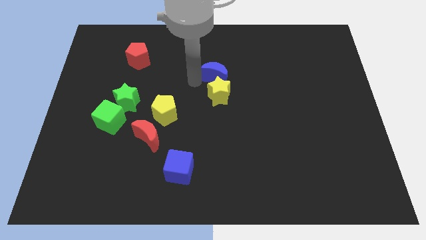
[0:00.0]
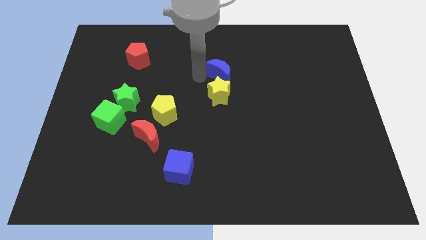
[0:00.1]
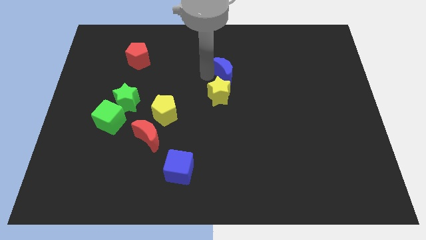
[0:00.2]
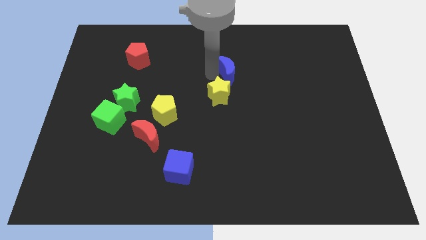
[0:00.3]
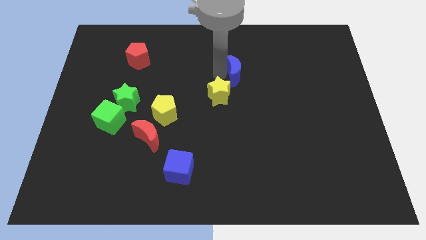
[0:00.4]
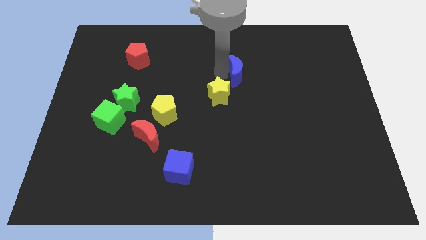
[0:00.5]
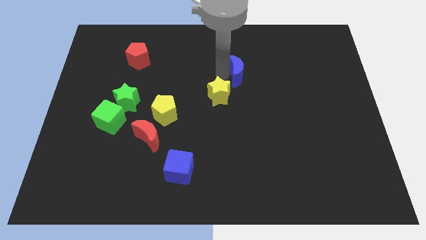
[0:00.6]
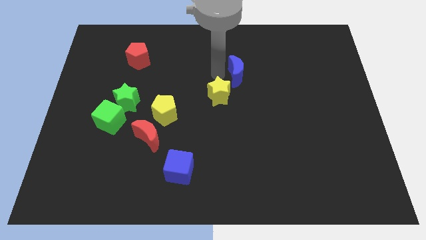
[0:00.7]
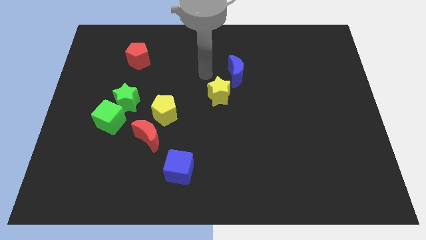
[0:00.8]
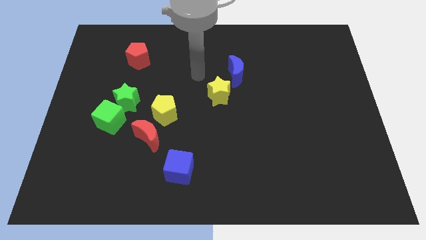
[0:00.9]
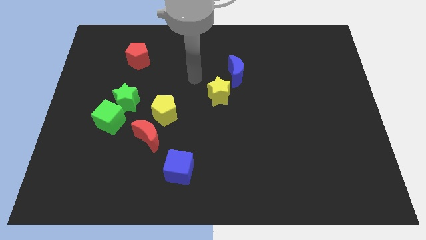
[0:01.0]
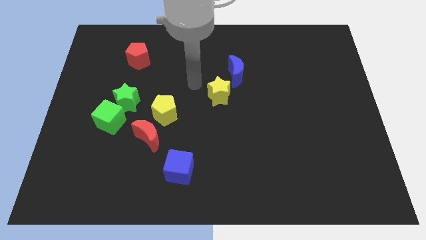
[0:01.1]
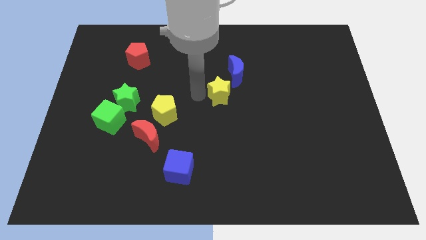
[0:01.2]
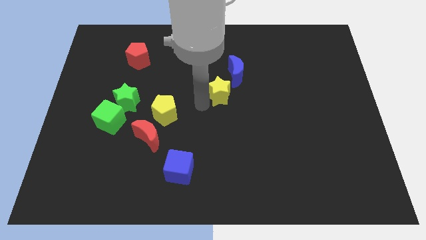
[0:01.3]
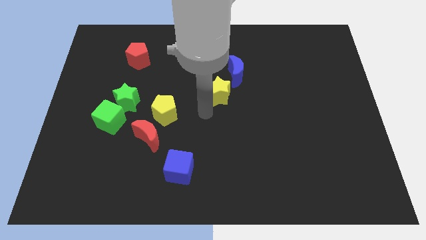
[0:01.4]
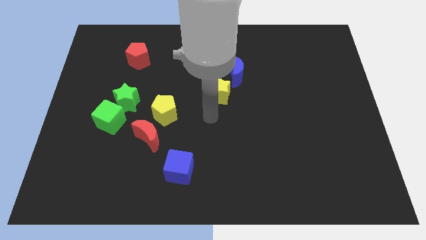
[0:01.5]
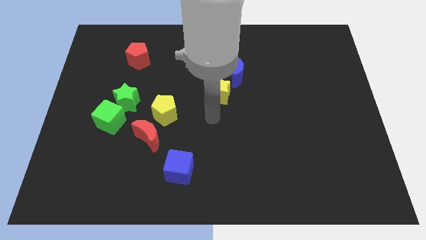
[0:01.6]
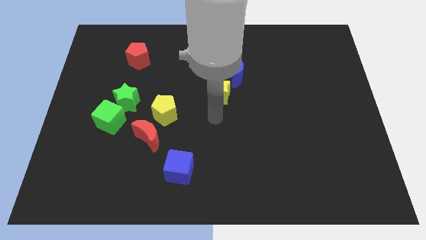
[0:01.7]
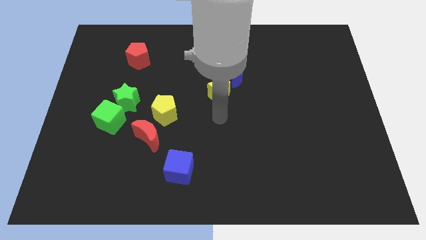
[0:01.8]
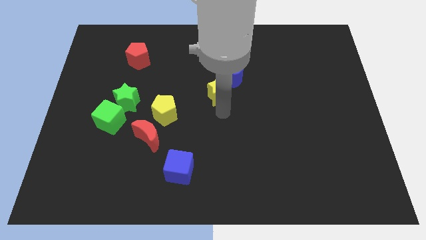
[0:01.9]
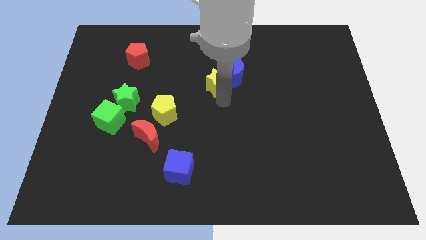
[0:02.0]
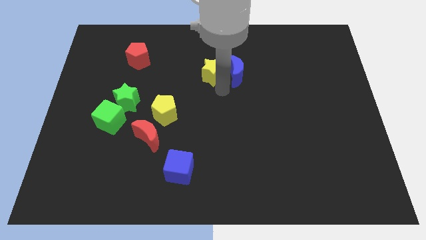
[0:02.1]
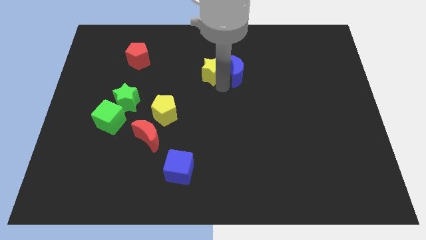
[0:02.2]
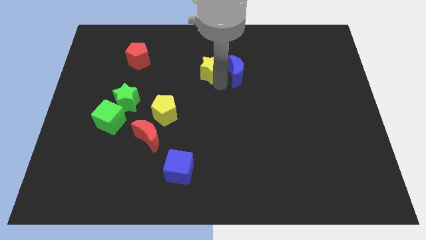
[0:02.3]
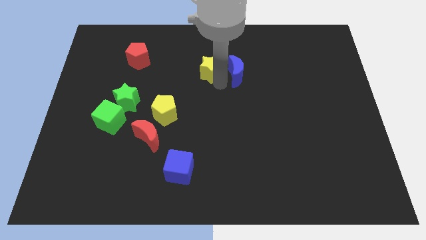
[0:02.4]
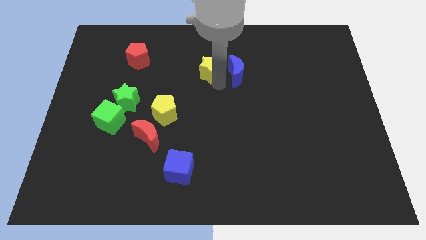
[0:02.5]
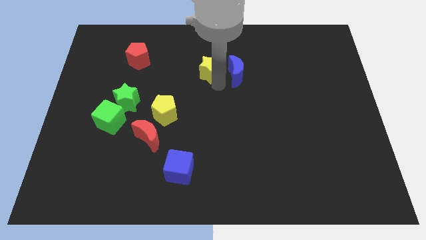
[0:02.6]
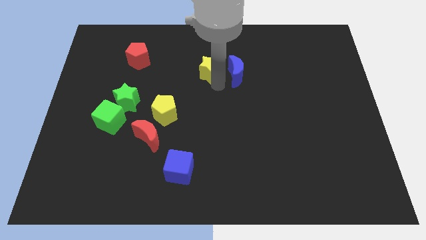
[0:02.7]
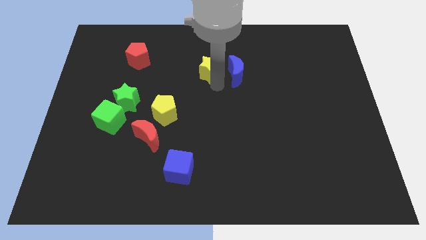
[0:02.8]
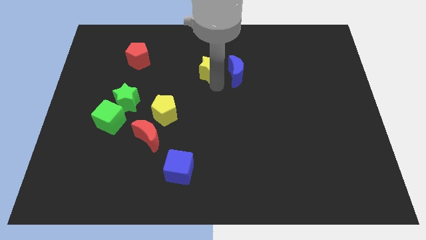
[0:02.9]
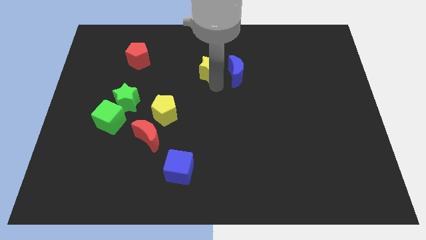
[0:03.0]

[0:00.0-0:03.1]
slightly move yellow star upwards

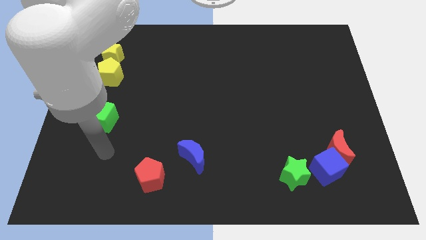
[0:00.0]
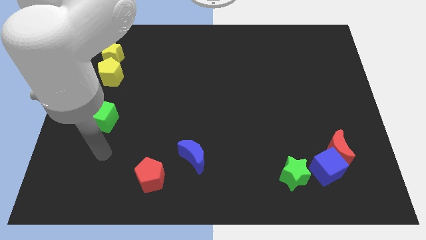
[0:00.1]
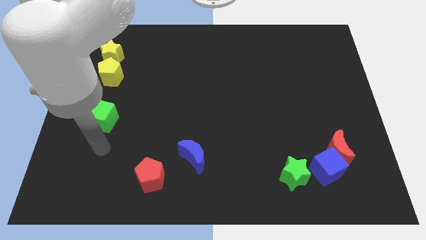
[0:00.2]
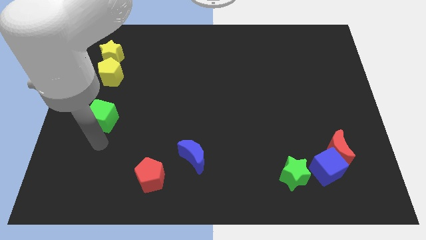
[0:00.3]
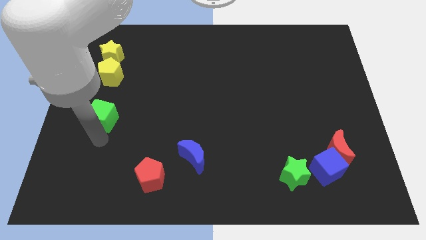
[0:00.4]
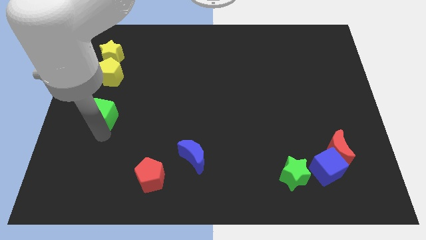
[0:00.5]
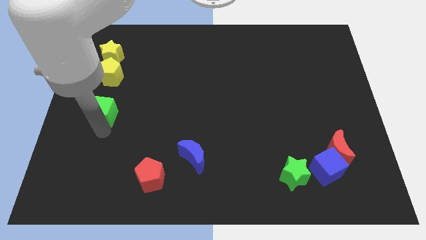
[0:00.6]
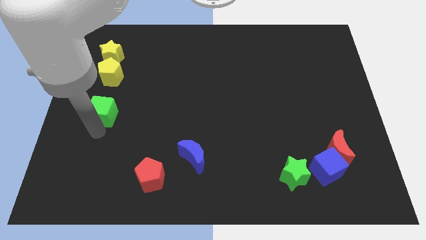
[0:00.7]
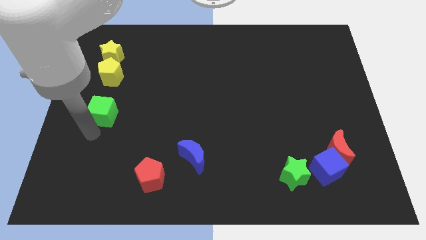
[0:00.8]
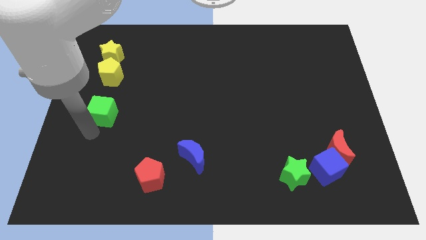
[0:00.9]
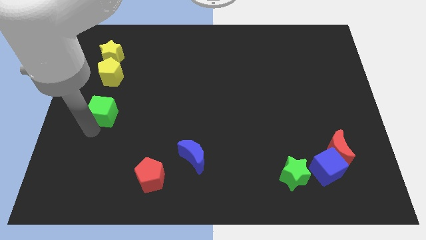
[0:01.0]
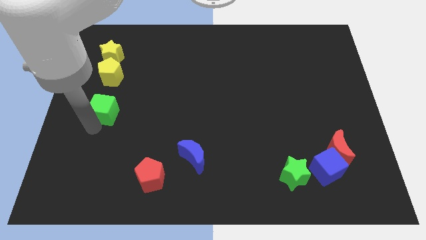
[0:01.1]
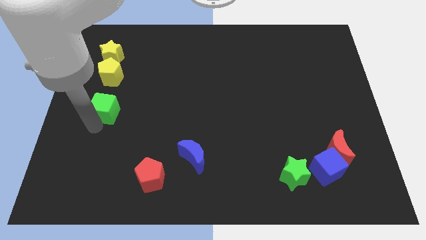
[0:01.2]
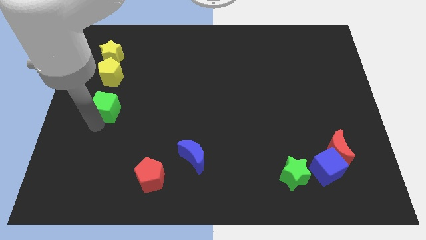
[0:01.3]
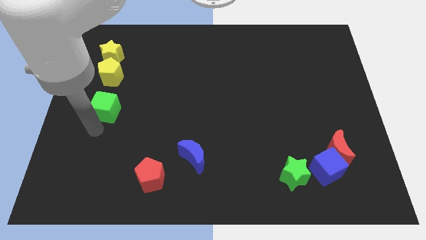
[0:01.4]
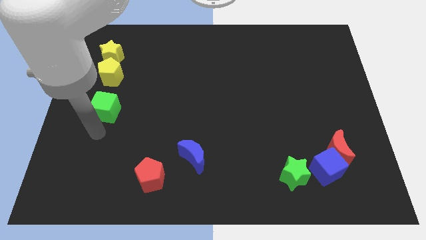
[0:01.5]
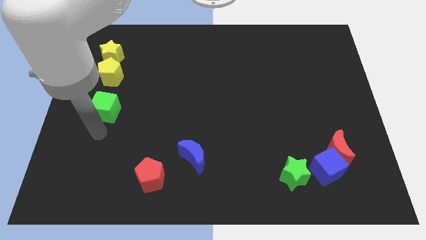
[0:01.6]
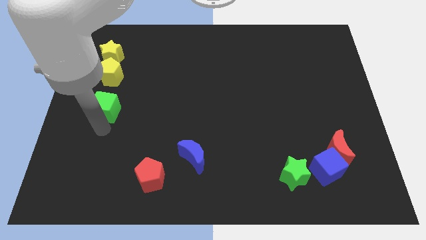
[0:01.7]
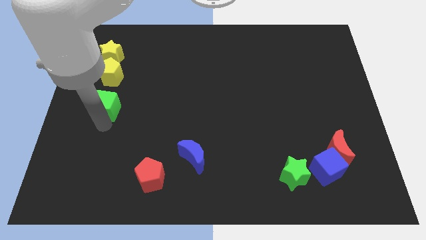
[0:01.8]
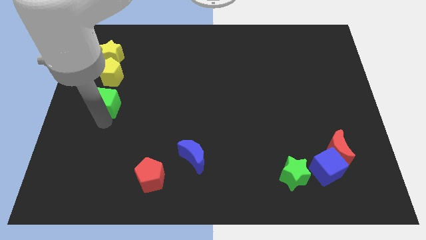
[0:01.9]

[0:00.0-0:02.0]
place the green cube below the yellow pentagon

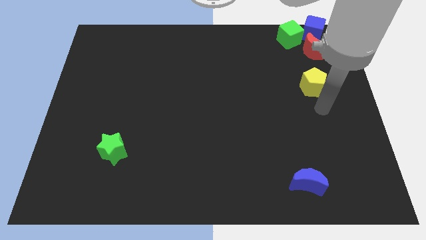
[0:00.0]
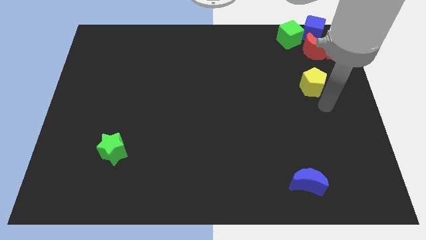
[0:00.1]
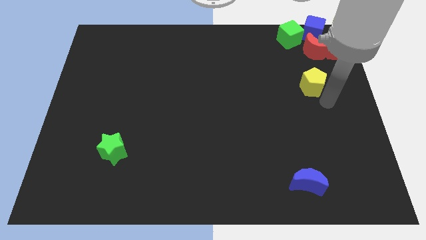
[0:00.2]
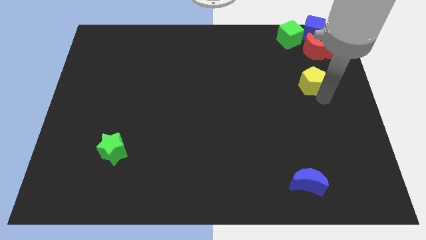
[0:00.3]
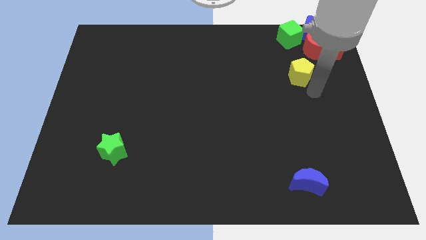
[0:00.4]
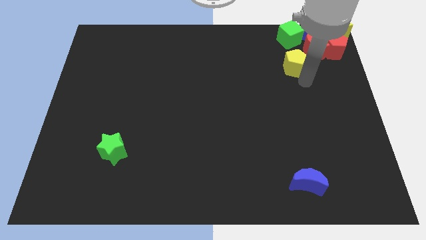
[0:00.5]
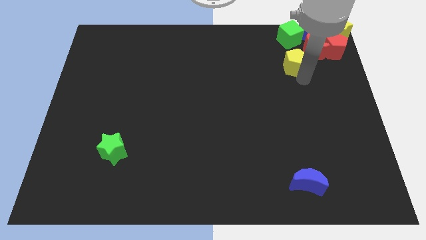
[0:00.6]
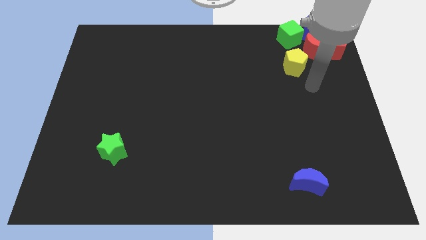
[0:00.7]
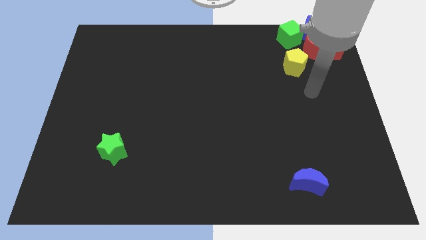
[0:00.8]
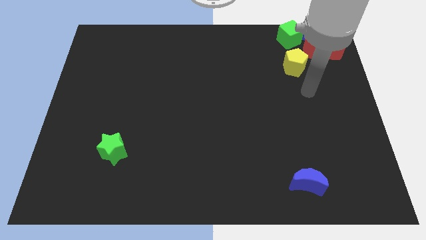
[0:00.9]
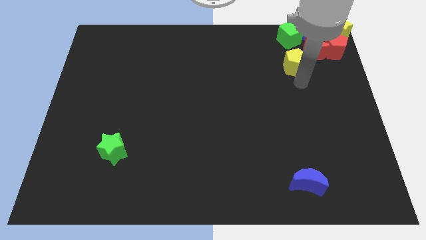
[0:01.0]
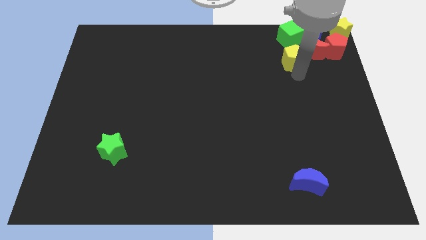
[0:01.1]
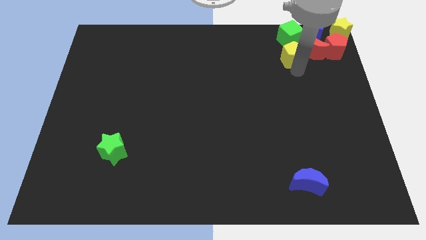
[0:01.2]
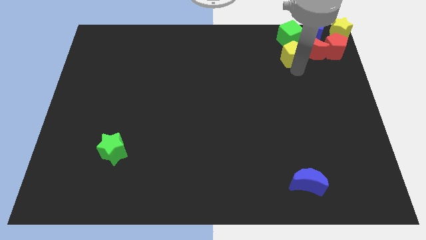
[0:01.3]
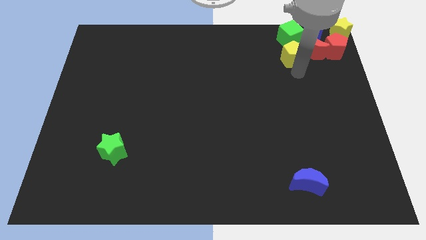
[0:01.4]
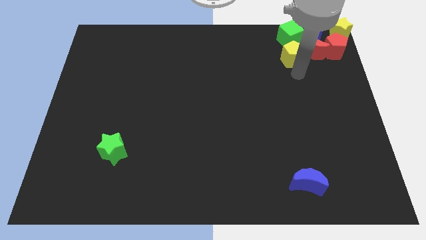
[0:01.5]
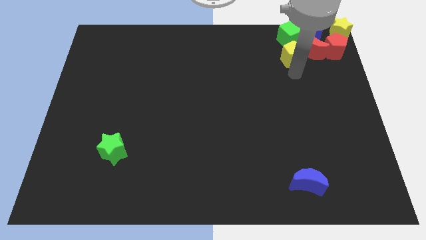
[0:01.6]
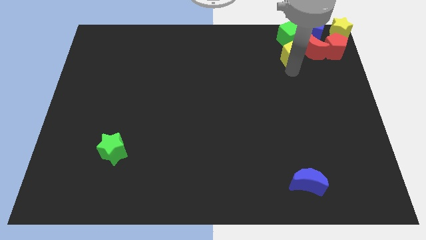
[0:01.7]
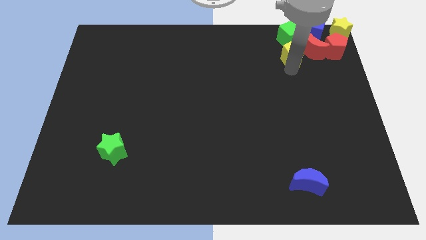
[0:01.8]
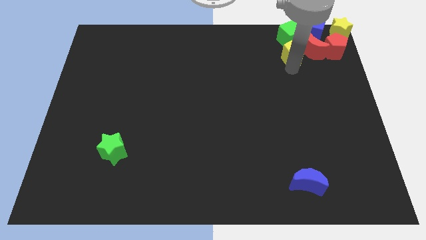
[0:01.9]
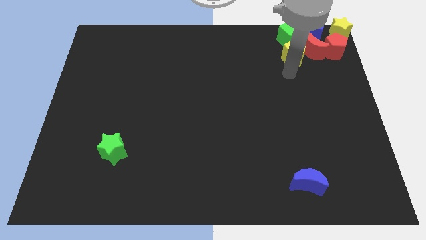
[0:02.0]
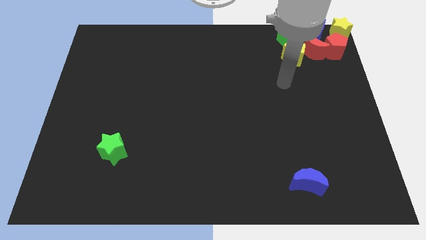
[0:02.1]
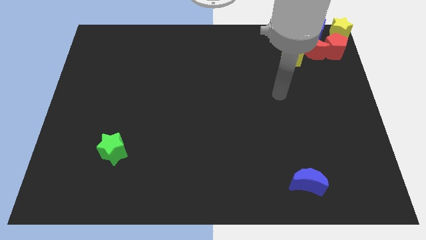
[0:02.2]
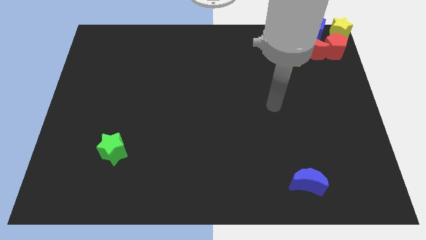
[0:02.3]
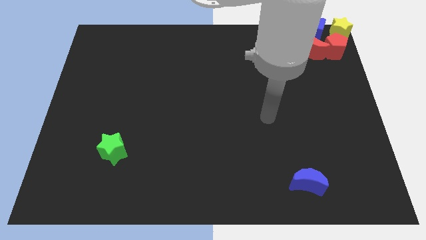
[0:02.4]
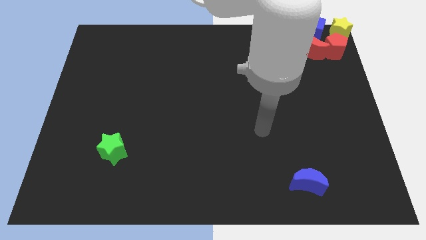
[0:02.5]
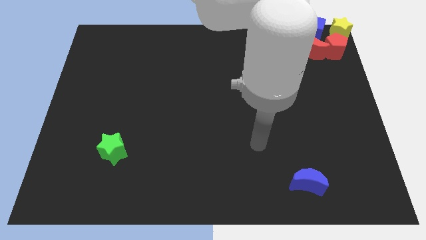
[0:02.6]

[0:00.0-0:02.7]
place the yellow pentagon in between the red moon and green cube

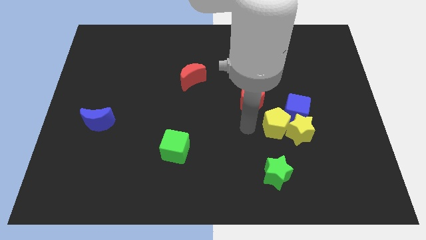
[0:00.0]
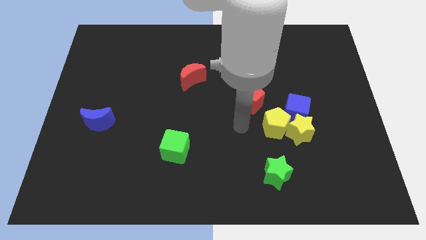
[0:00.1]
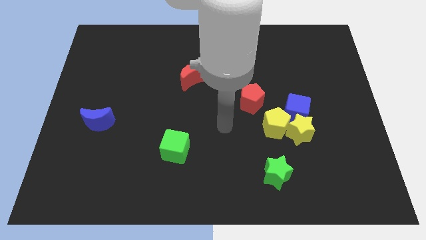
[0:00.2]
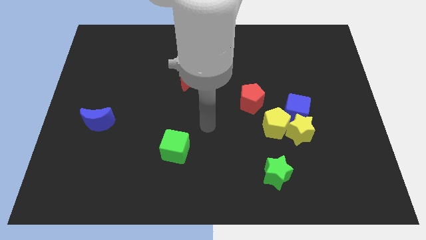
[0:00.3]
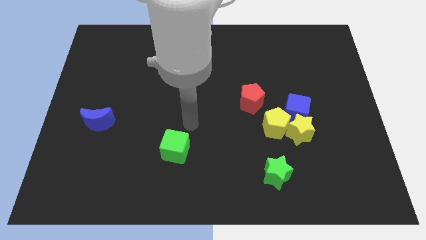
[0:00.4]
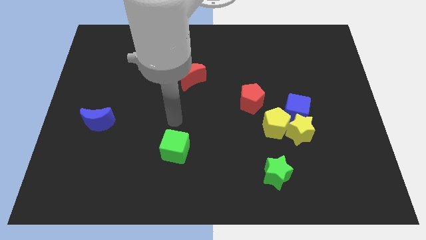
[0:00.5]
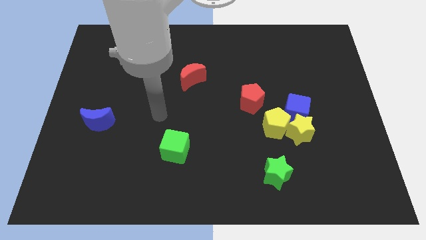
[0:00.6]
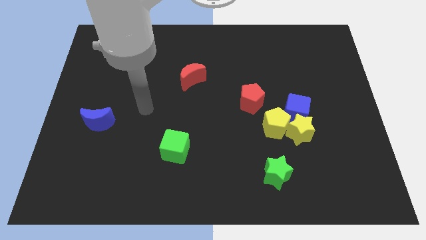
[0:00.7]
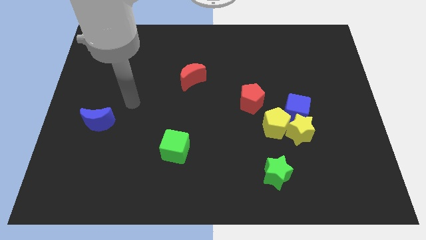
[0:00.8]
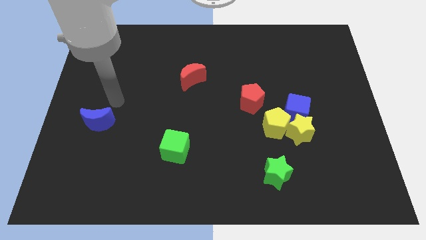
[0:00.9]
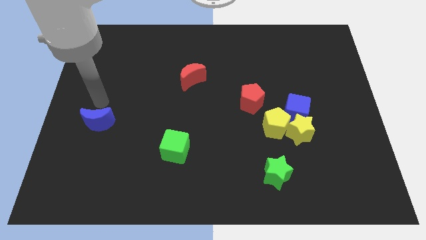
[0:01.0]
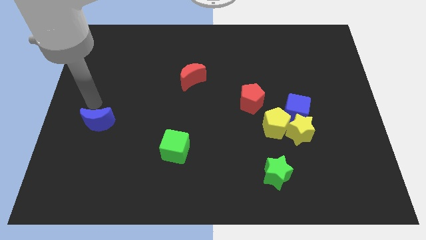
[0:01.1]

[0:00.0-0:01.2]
place your arm to the top of the blue moon

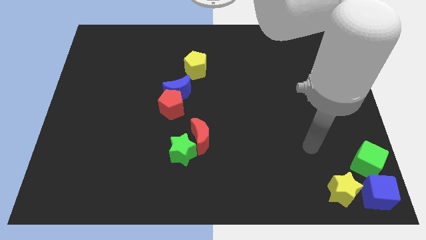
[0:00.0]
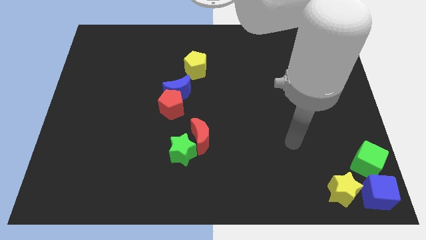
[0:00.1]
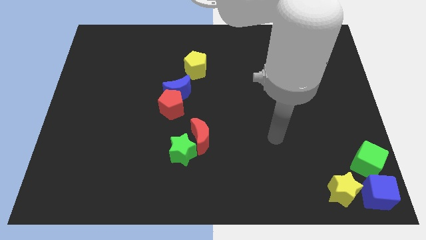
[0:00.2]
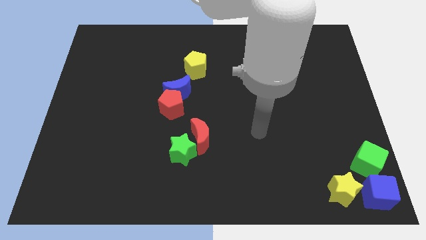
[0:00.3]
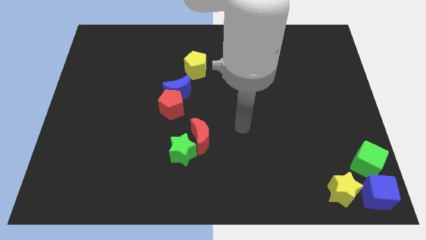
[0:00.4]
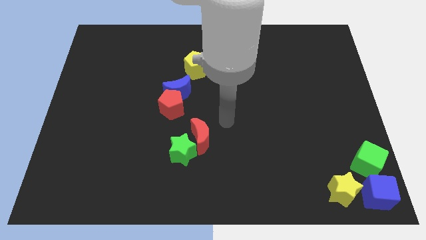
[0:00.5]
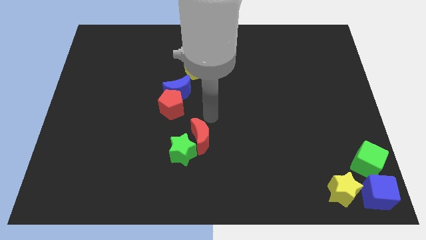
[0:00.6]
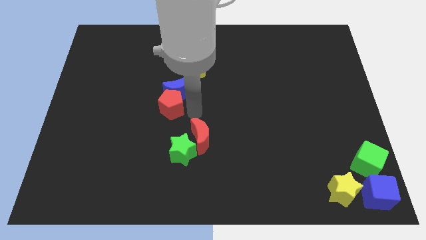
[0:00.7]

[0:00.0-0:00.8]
point your arm at the top of the red crescent
